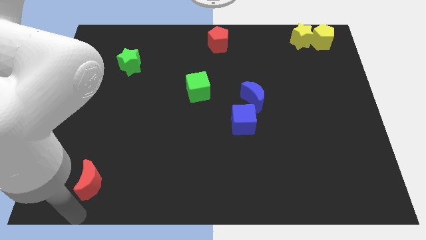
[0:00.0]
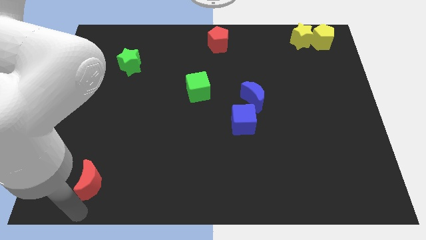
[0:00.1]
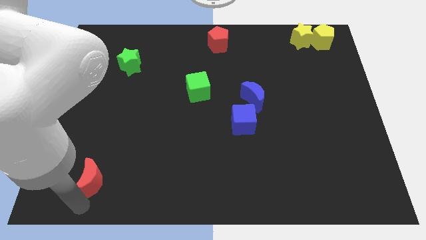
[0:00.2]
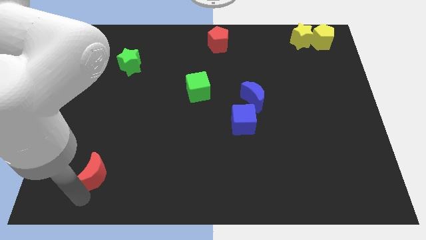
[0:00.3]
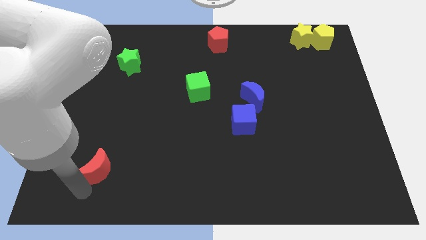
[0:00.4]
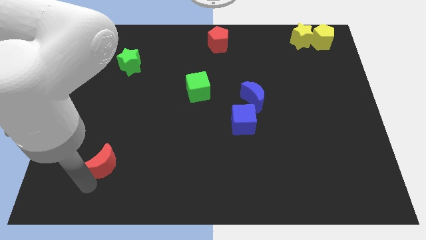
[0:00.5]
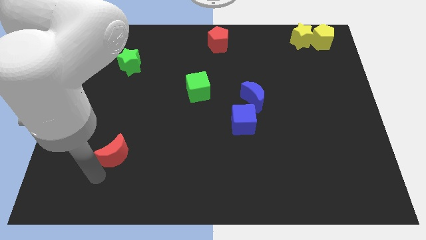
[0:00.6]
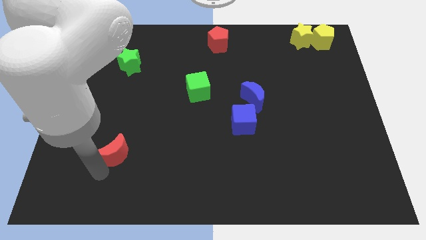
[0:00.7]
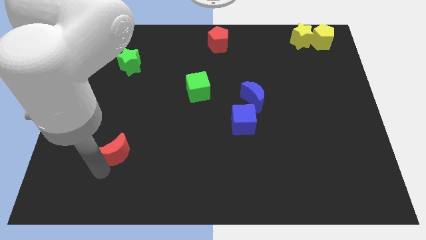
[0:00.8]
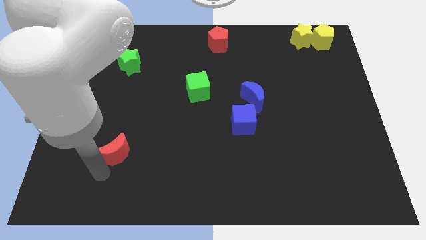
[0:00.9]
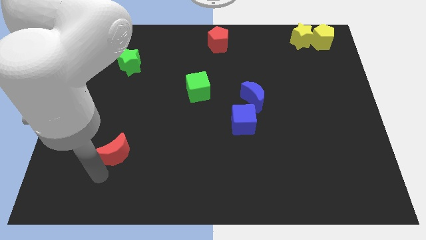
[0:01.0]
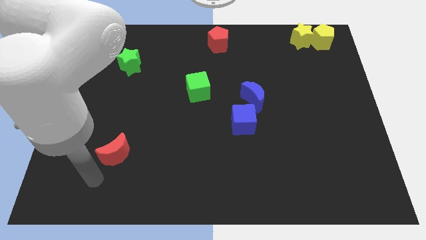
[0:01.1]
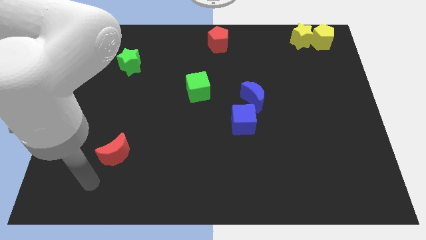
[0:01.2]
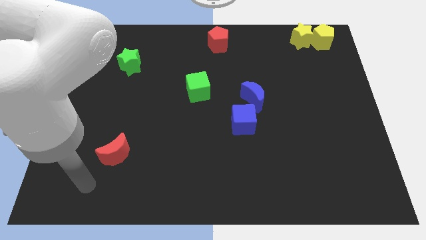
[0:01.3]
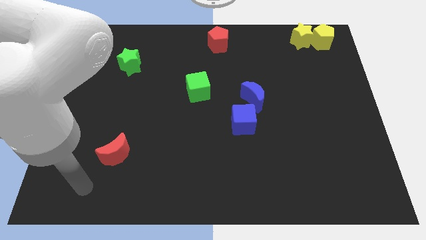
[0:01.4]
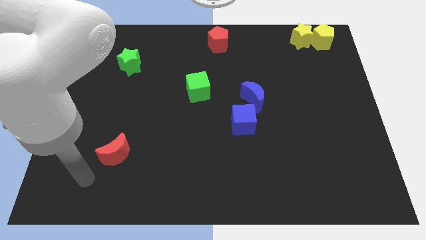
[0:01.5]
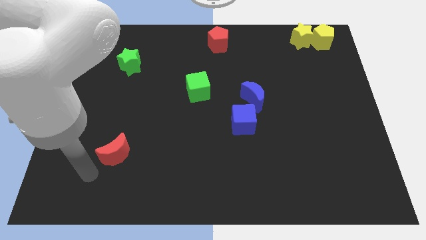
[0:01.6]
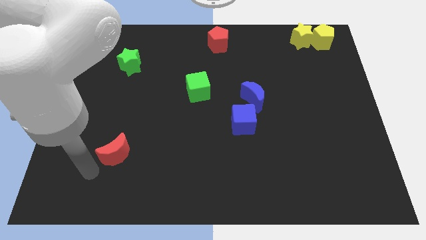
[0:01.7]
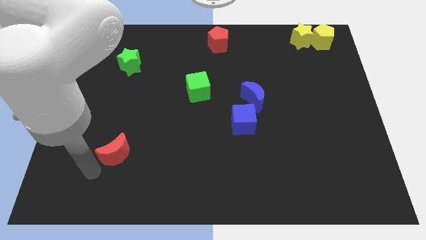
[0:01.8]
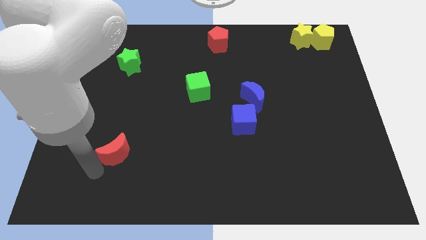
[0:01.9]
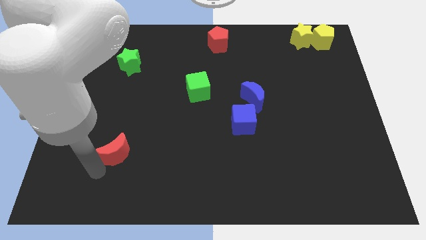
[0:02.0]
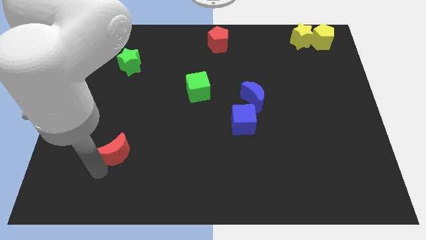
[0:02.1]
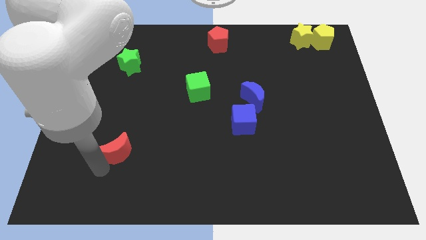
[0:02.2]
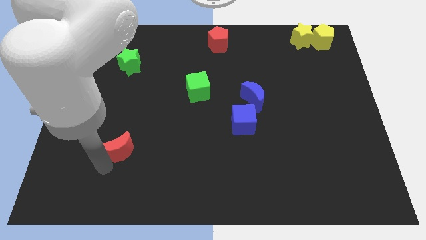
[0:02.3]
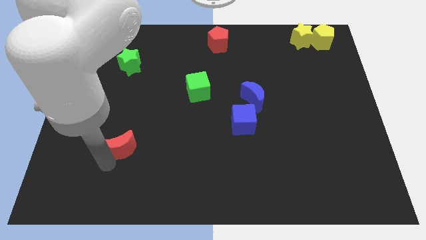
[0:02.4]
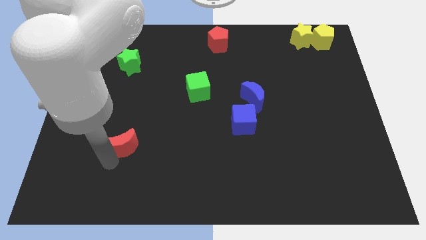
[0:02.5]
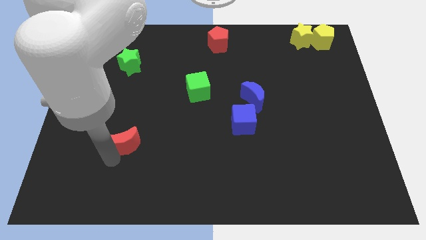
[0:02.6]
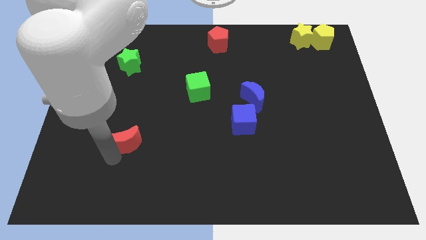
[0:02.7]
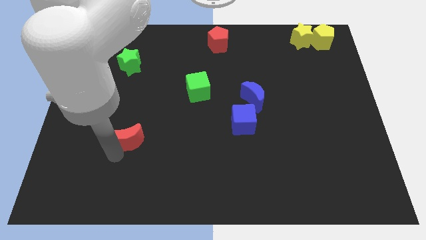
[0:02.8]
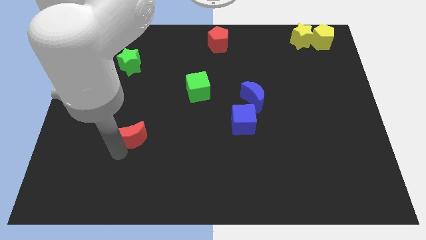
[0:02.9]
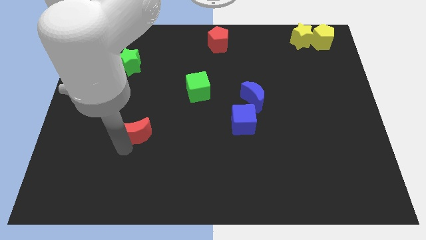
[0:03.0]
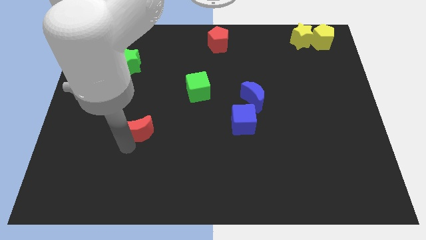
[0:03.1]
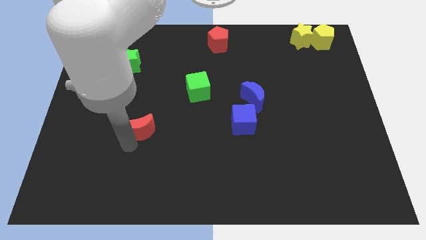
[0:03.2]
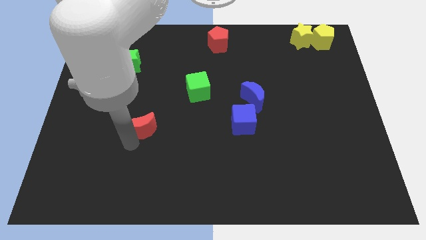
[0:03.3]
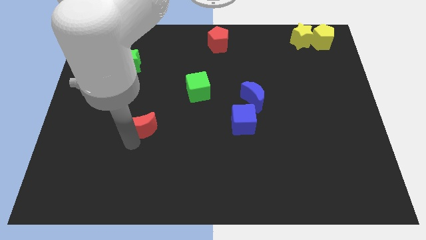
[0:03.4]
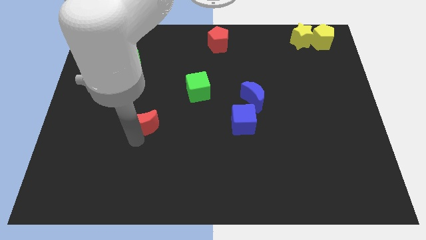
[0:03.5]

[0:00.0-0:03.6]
push the red moon slightly up

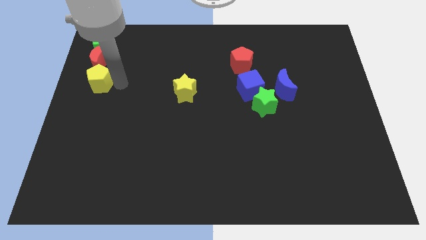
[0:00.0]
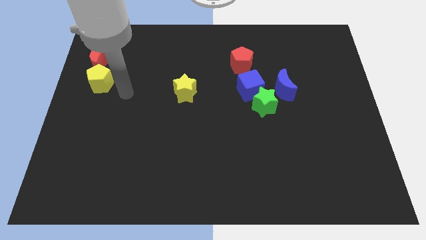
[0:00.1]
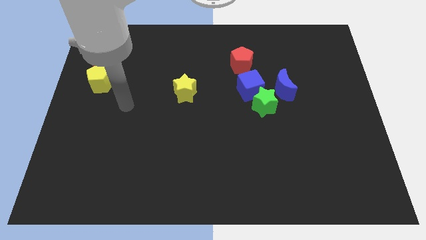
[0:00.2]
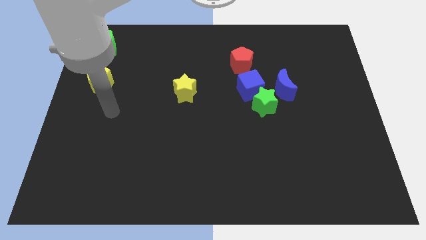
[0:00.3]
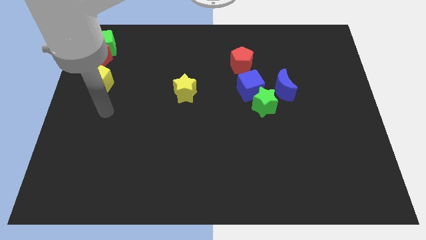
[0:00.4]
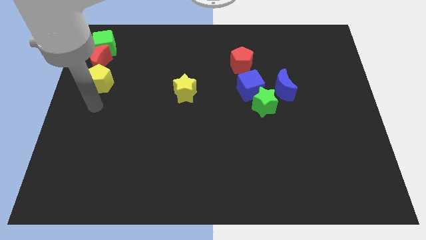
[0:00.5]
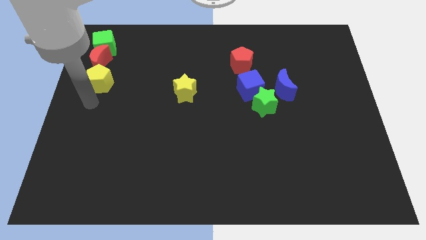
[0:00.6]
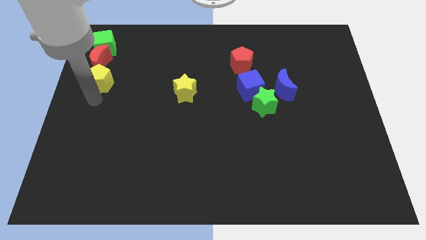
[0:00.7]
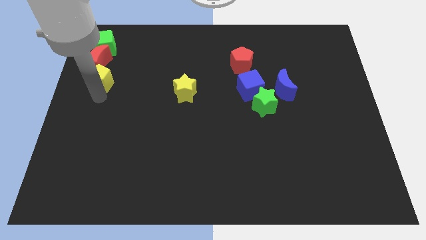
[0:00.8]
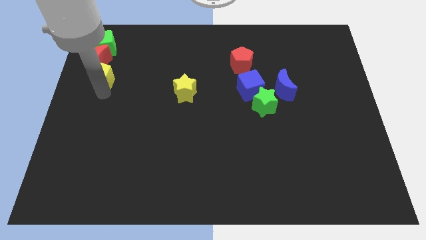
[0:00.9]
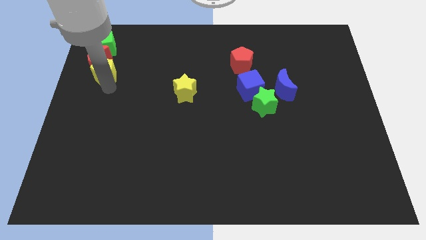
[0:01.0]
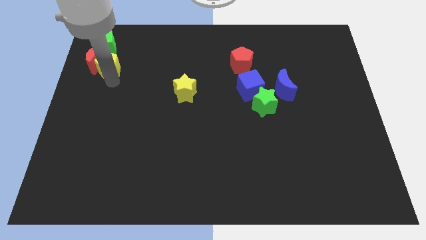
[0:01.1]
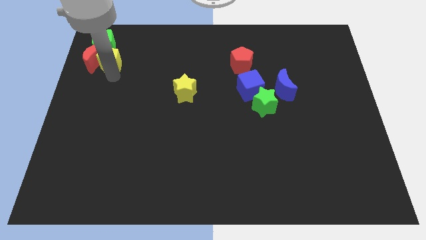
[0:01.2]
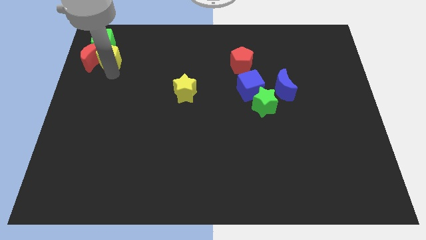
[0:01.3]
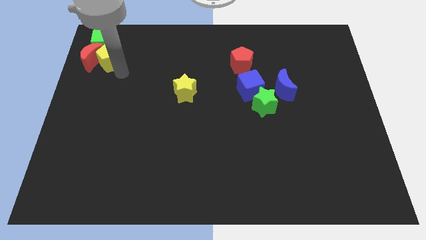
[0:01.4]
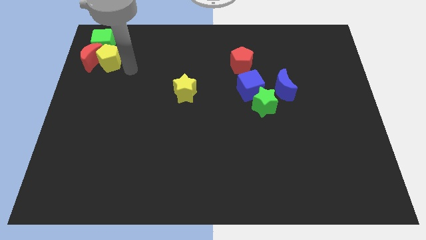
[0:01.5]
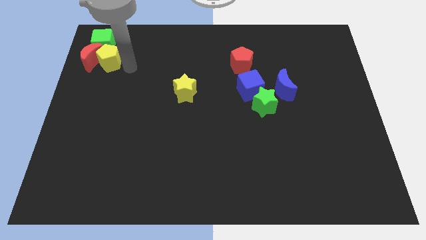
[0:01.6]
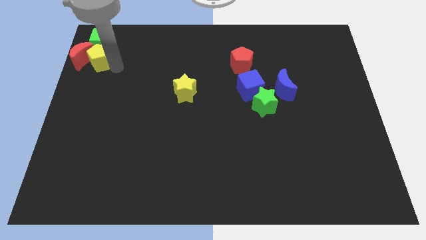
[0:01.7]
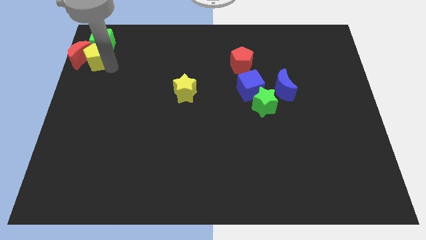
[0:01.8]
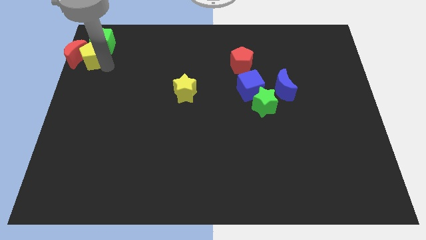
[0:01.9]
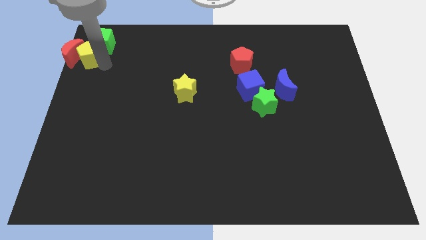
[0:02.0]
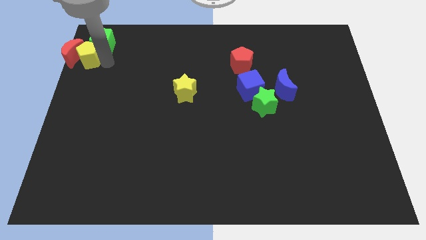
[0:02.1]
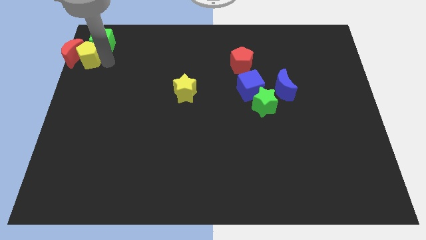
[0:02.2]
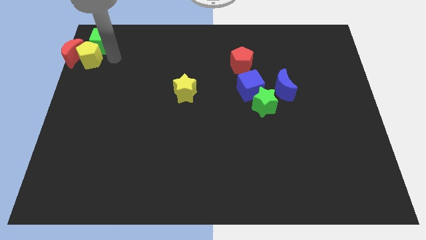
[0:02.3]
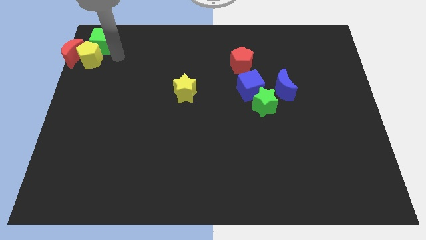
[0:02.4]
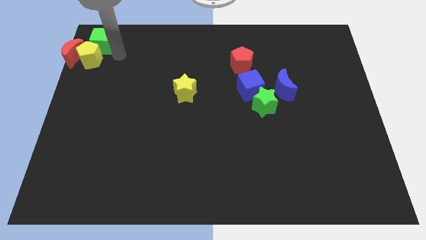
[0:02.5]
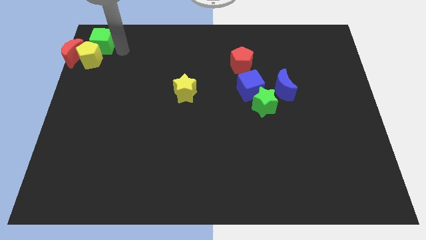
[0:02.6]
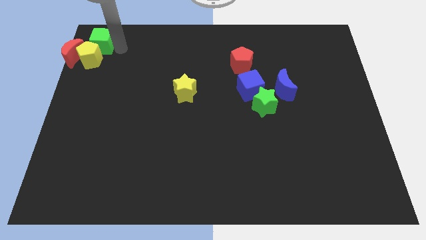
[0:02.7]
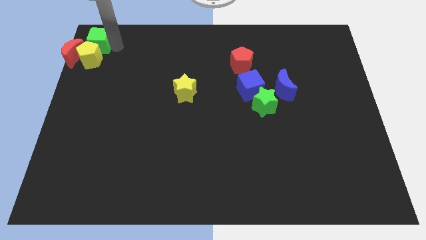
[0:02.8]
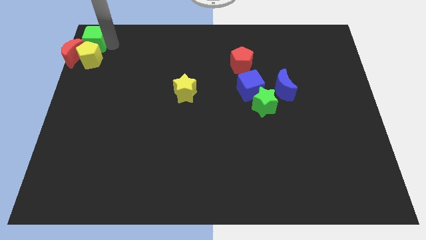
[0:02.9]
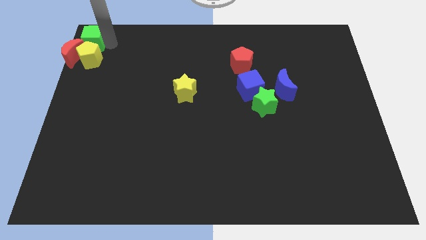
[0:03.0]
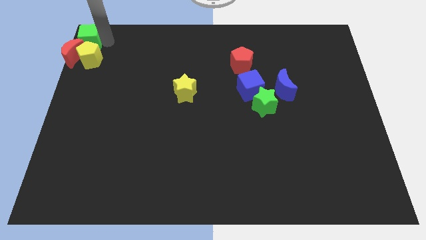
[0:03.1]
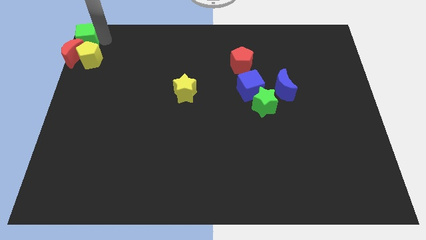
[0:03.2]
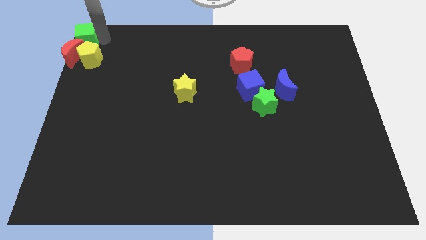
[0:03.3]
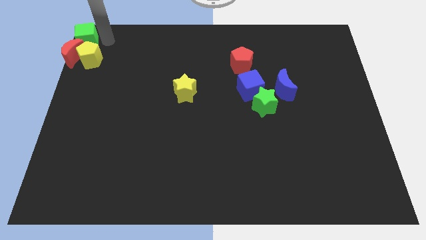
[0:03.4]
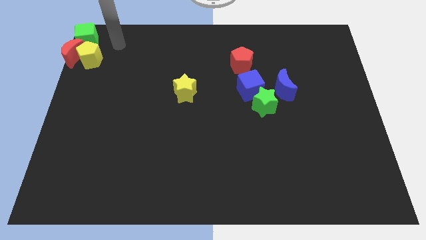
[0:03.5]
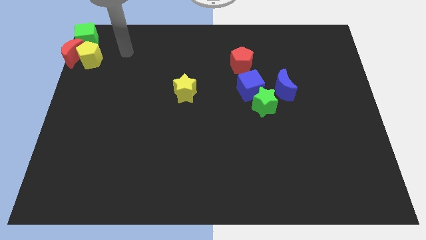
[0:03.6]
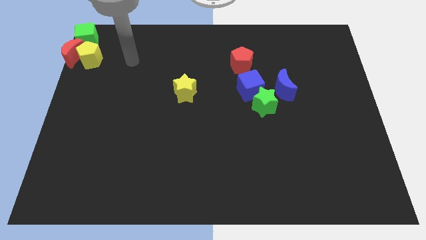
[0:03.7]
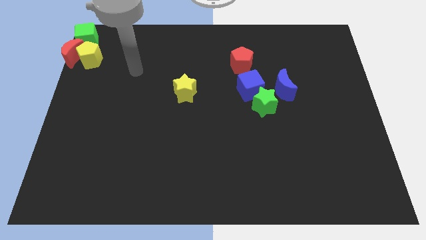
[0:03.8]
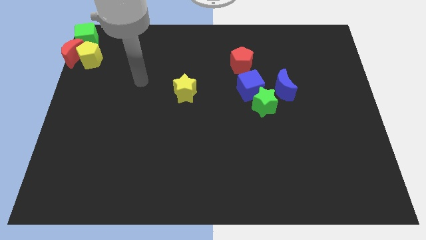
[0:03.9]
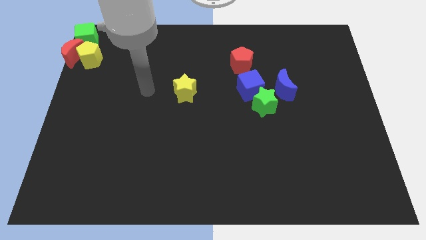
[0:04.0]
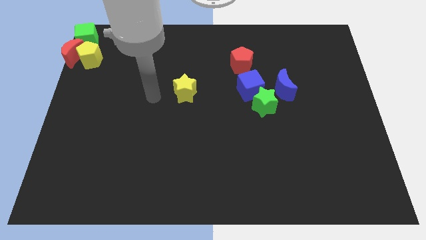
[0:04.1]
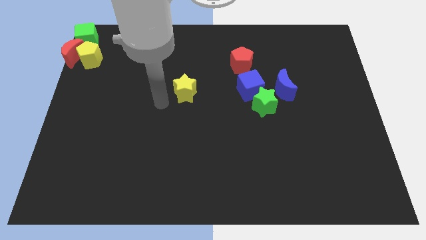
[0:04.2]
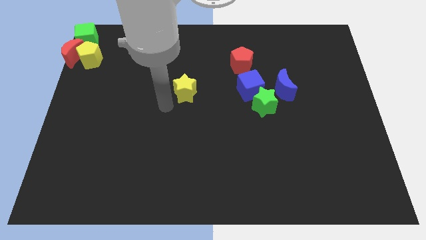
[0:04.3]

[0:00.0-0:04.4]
put the yellow pentagon red moon and the green cube at the top left corner

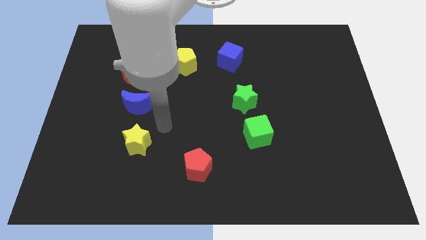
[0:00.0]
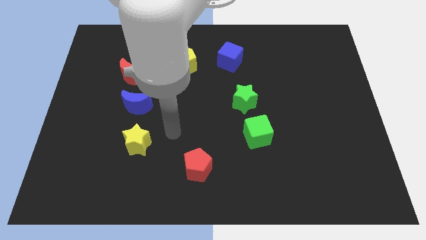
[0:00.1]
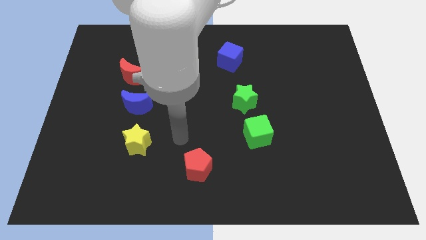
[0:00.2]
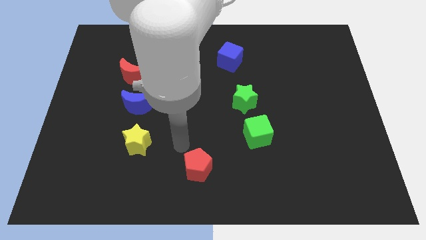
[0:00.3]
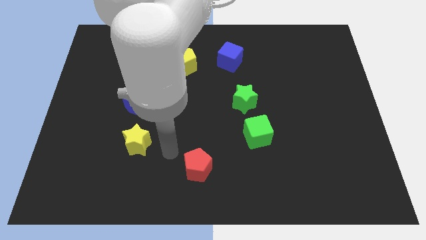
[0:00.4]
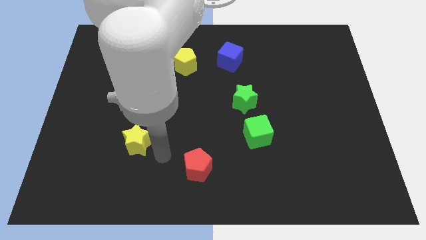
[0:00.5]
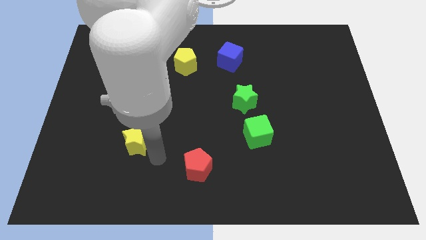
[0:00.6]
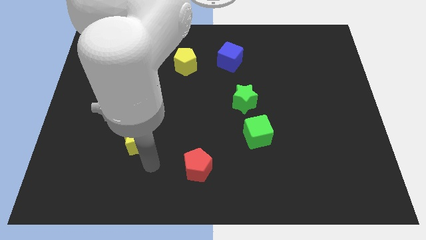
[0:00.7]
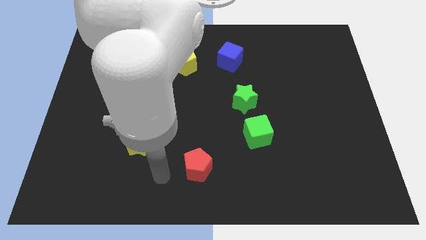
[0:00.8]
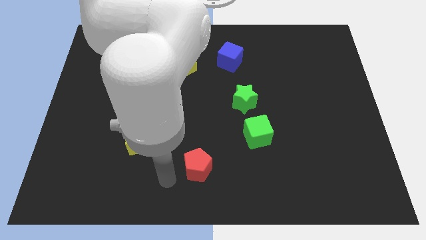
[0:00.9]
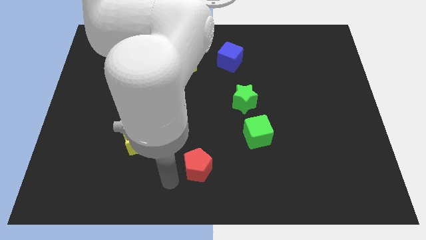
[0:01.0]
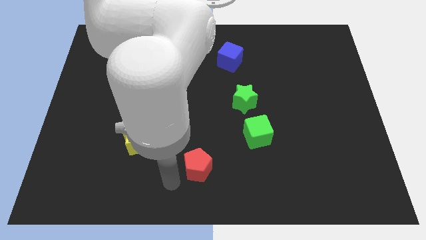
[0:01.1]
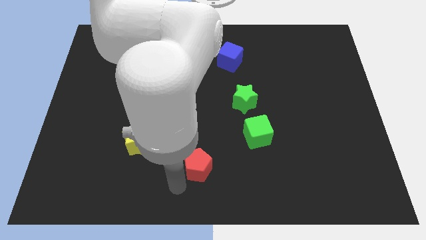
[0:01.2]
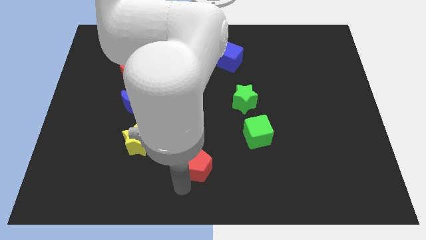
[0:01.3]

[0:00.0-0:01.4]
move your arm towards the red pentagon
